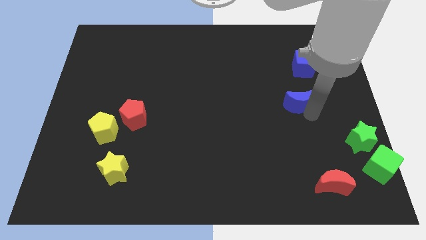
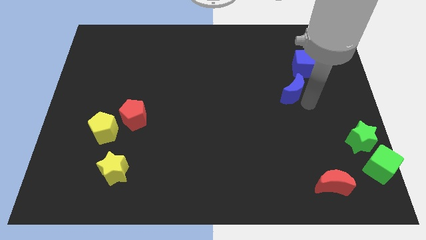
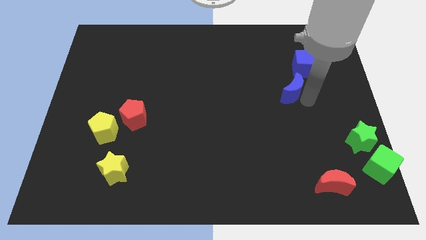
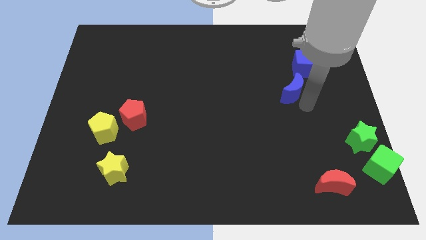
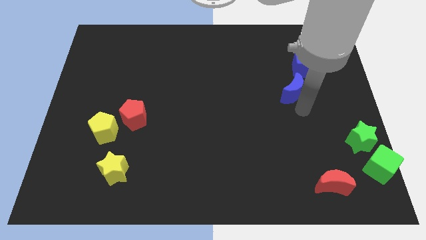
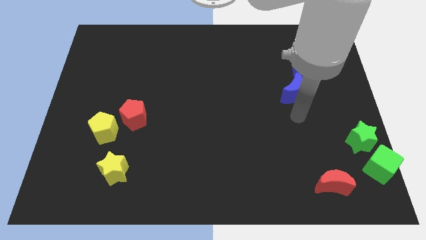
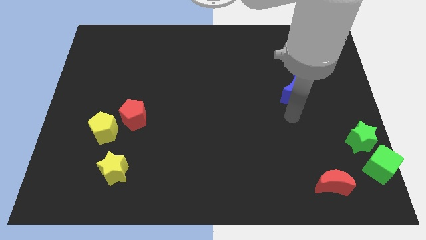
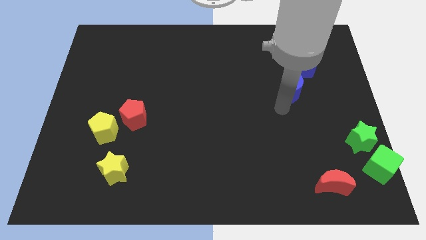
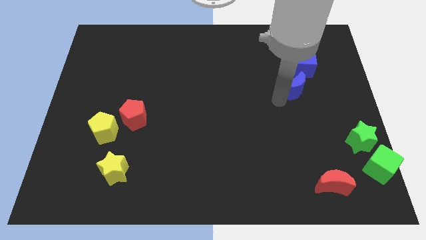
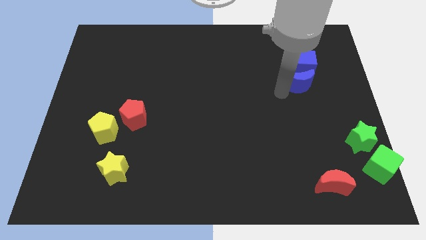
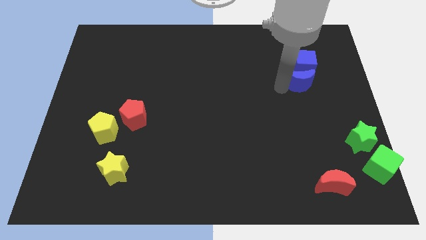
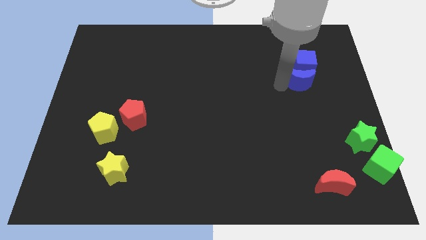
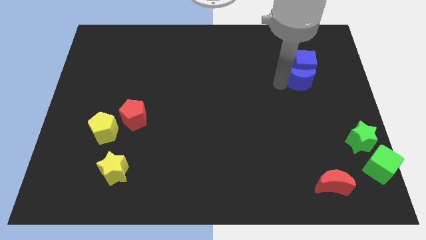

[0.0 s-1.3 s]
move the blue crescent into the bottom side of the blue cube

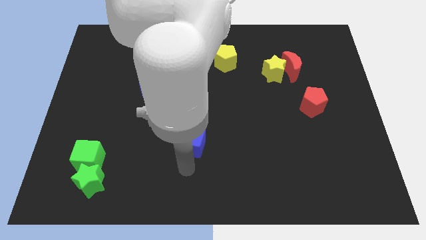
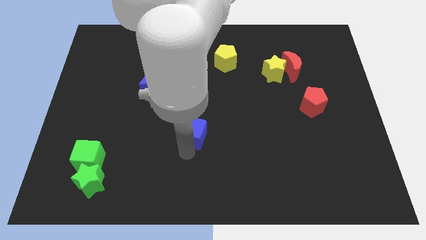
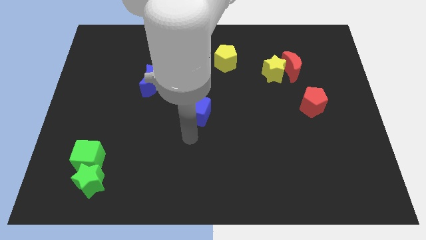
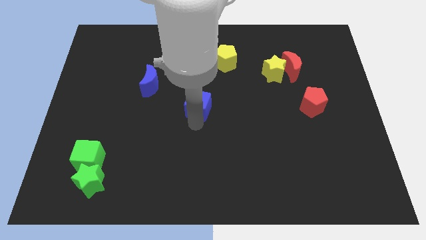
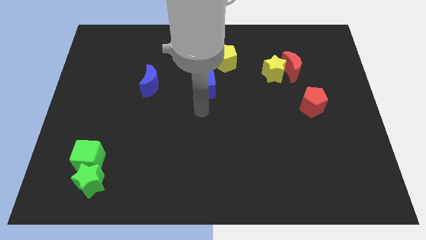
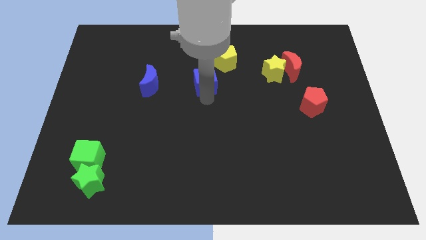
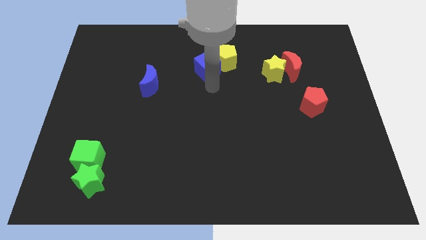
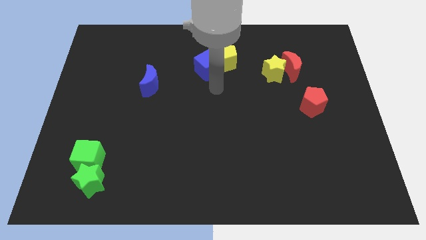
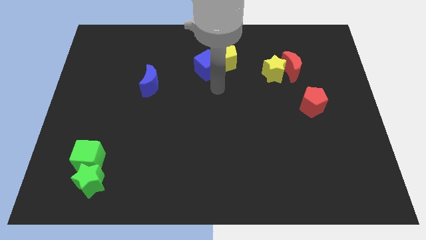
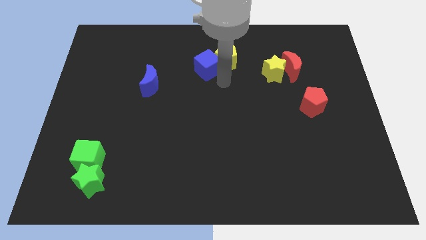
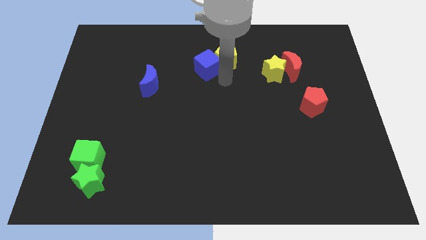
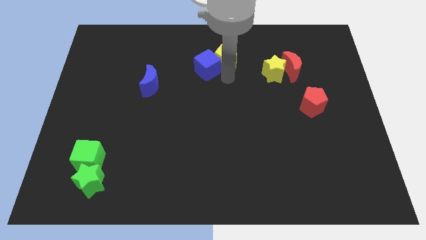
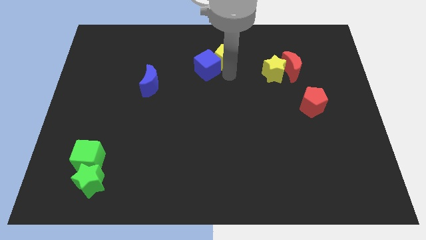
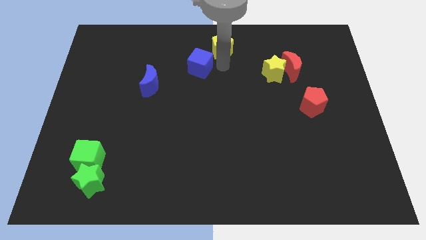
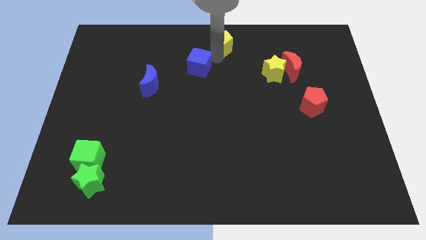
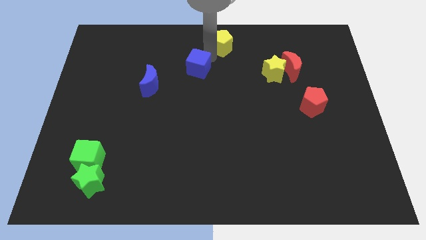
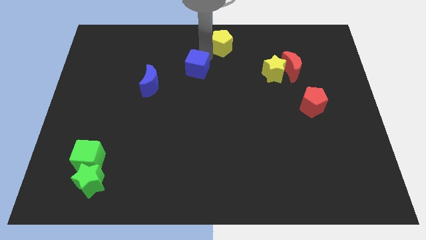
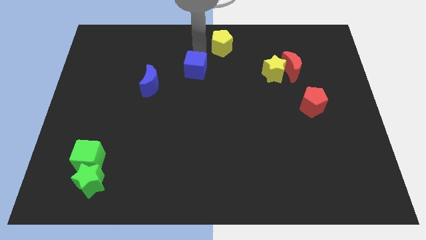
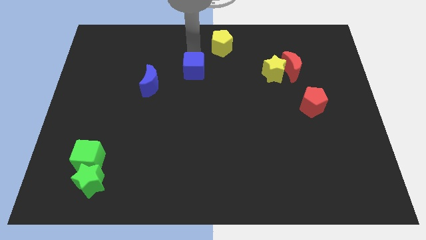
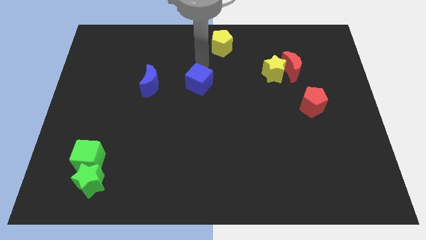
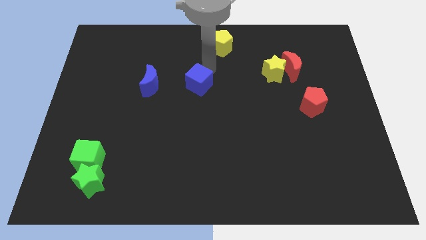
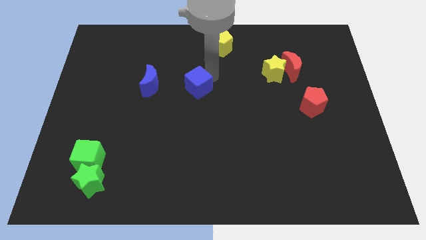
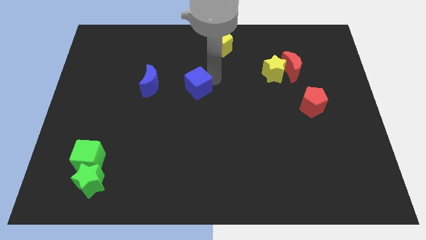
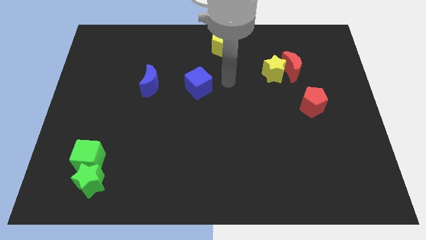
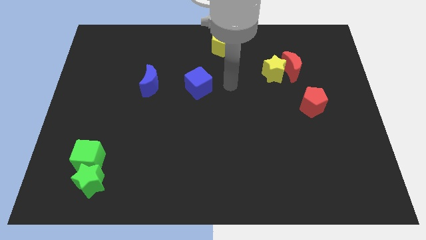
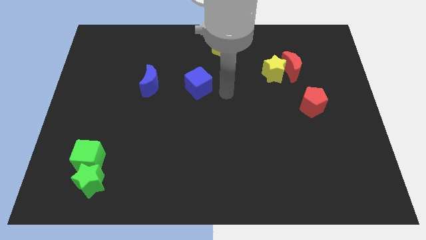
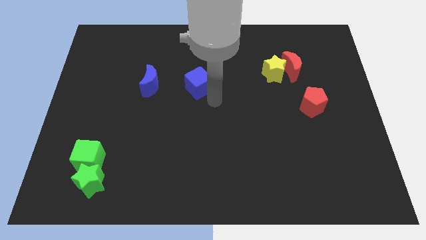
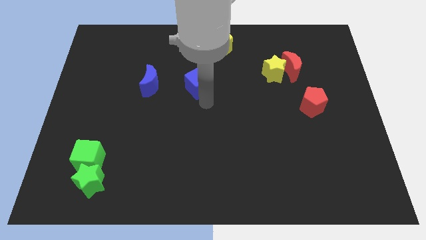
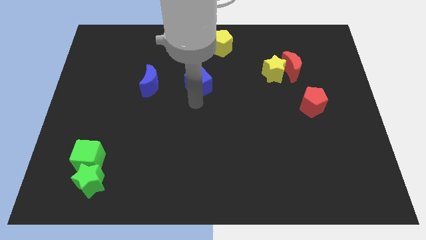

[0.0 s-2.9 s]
place the blue cube to the right of the blue moon

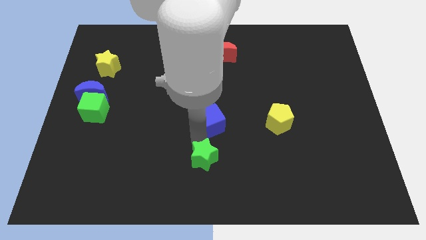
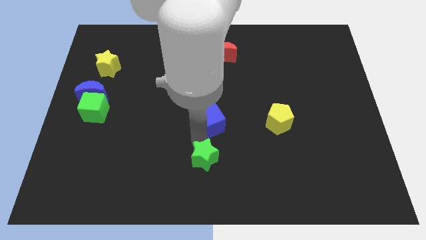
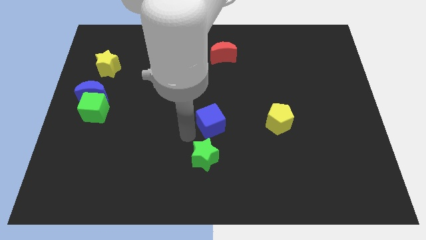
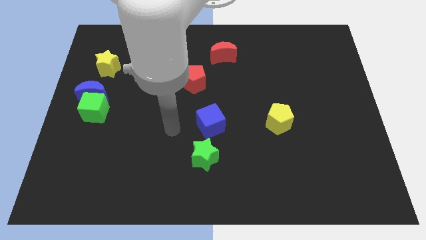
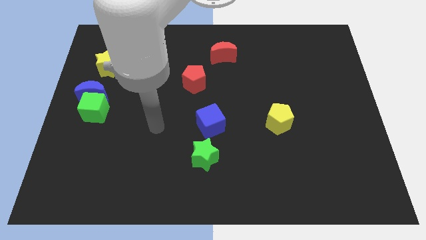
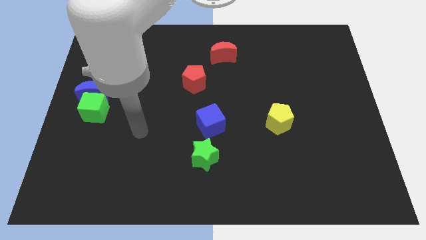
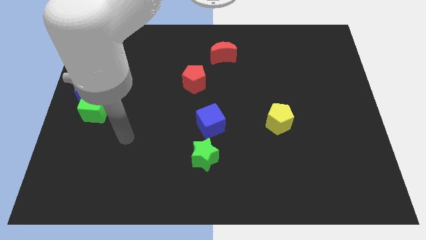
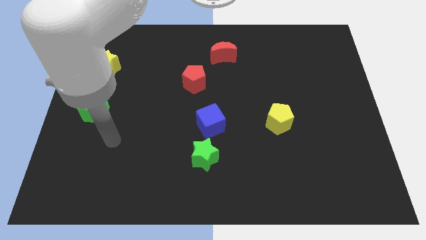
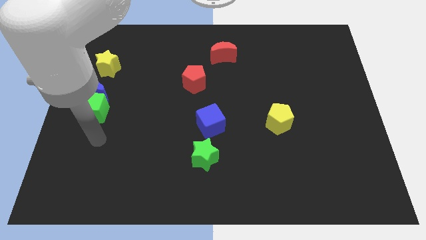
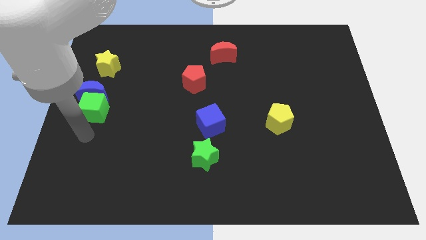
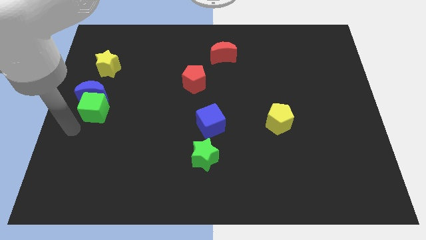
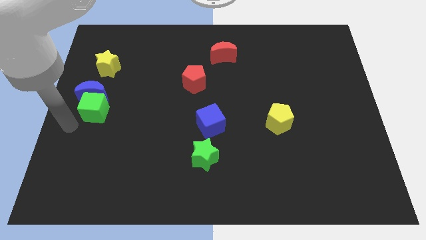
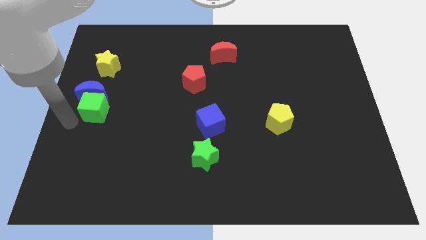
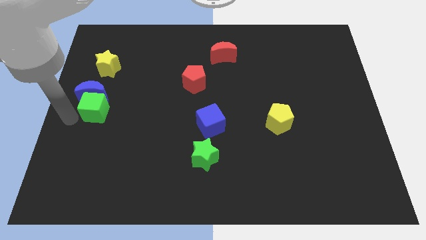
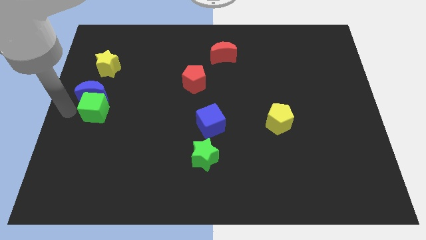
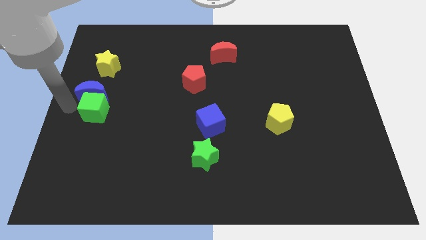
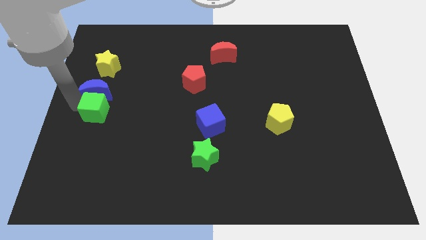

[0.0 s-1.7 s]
place the arm at the left side of the green cube

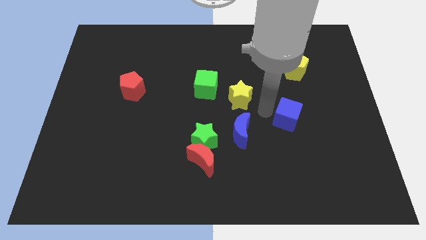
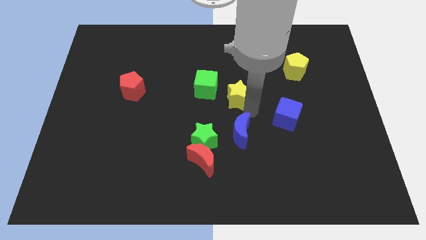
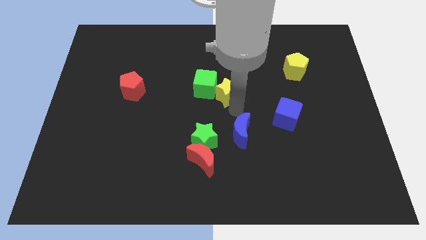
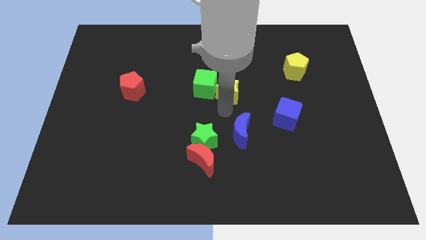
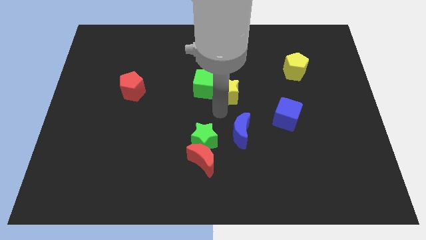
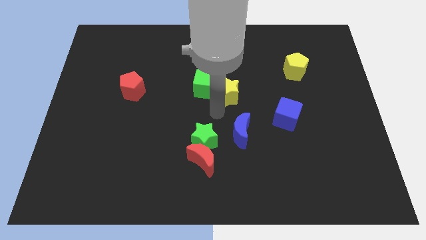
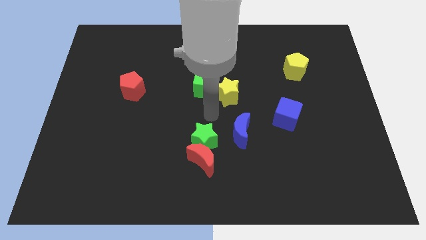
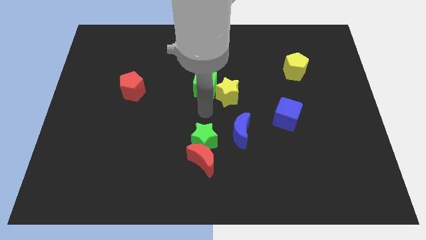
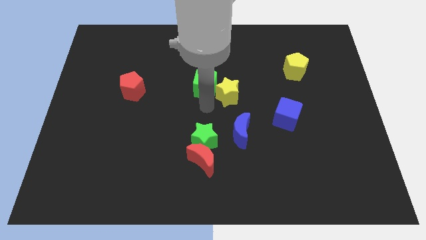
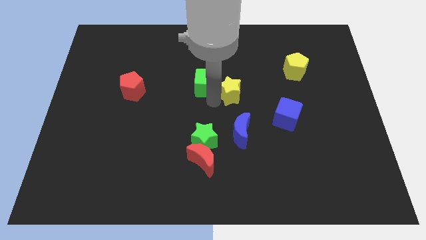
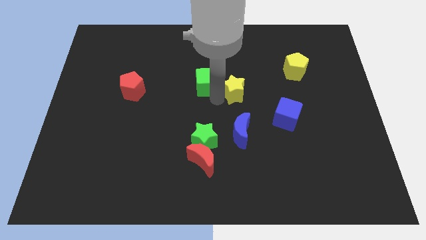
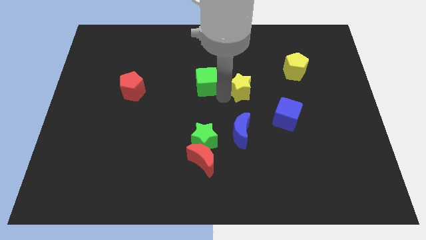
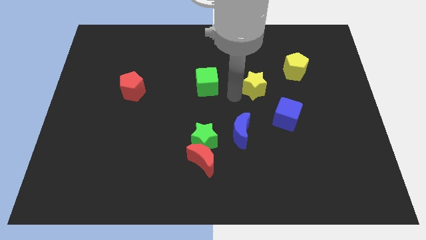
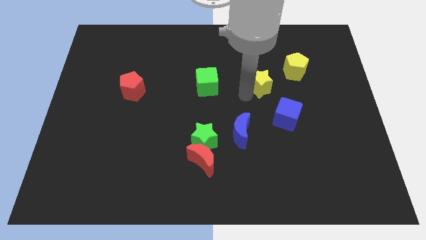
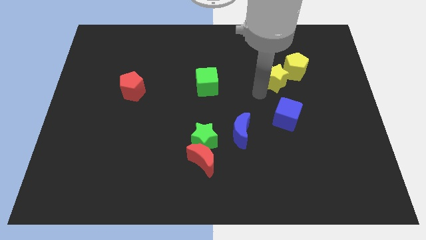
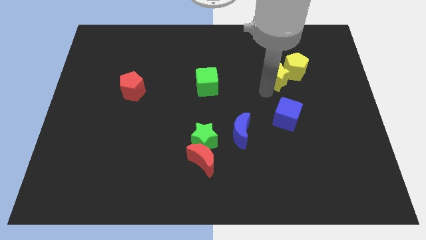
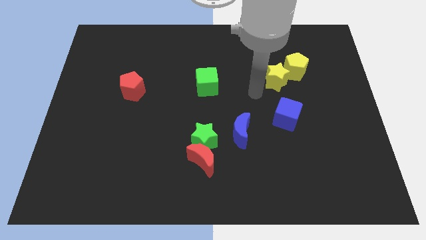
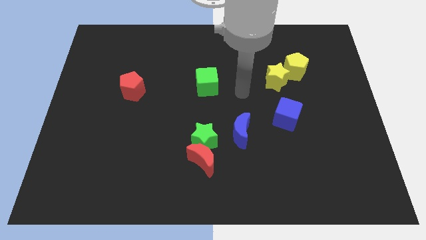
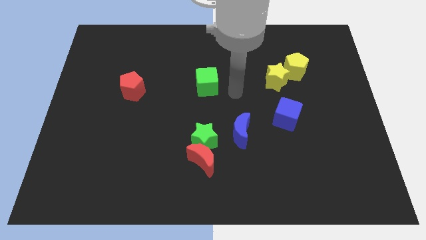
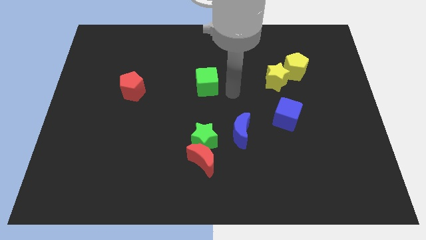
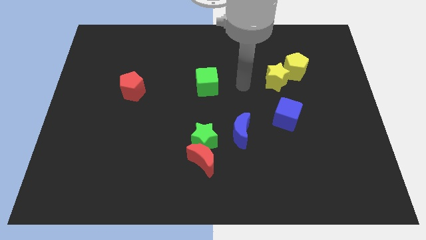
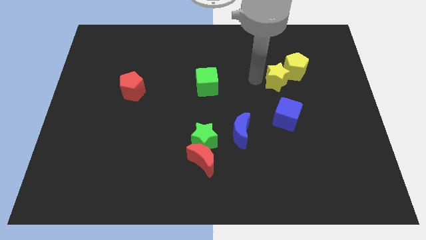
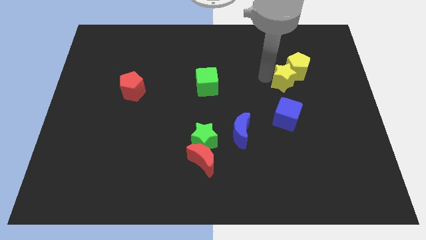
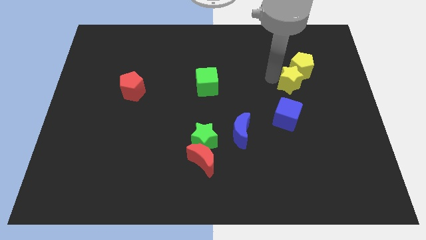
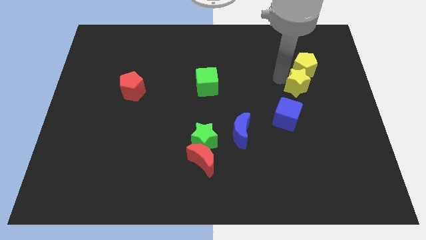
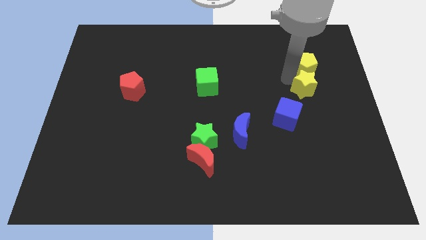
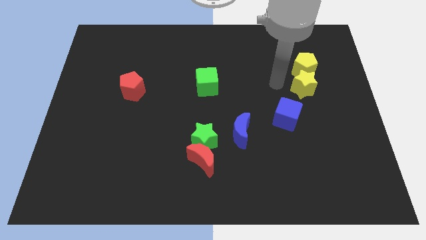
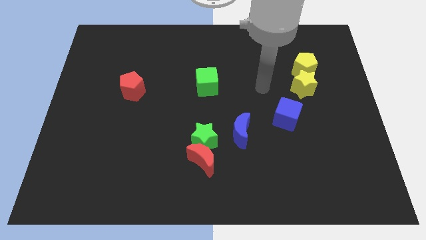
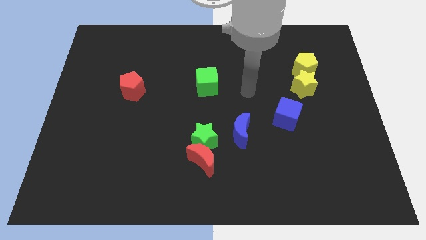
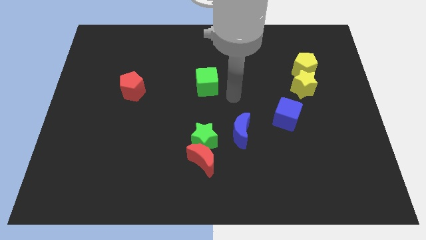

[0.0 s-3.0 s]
push the yellow star into the yellow pentagon
